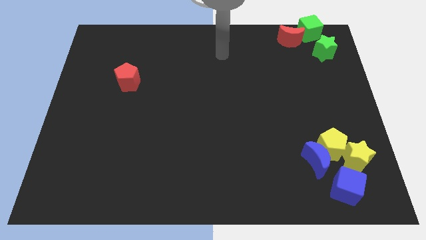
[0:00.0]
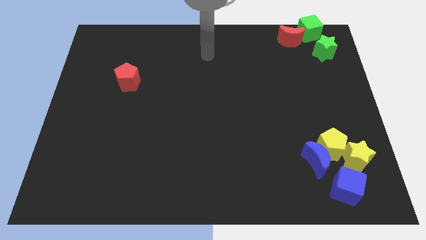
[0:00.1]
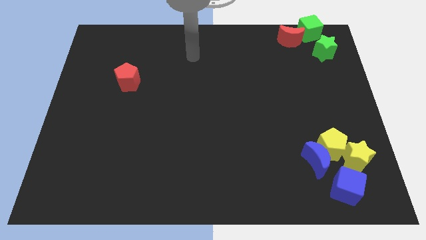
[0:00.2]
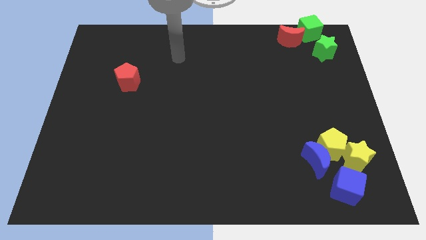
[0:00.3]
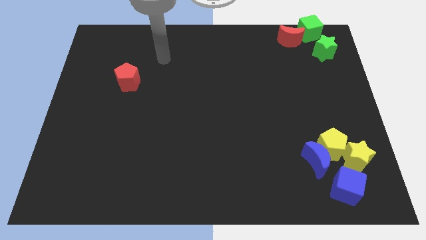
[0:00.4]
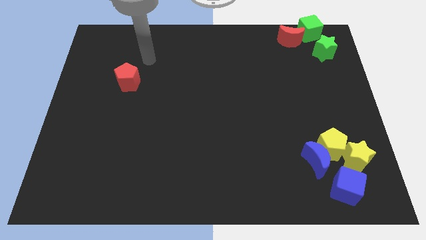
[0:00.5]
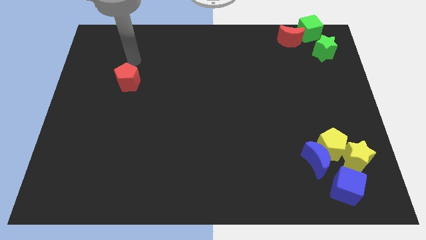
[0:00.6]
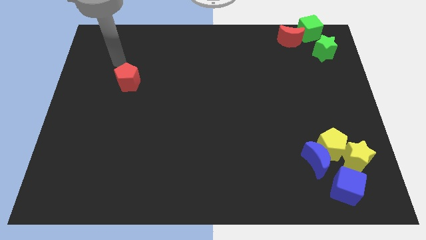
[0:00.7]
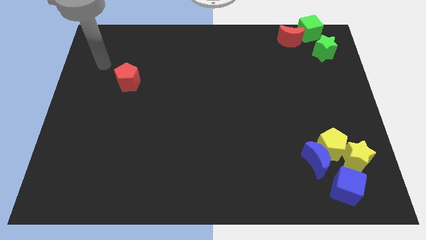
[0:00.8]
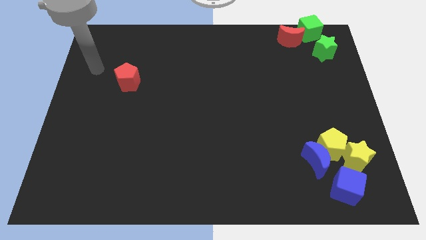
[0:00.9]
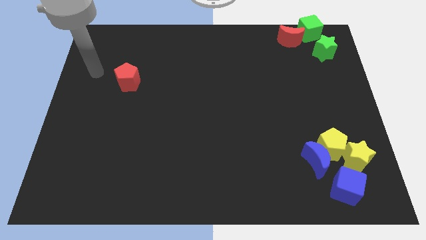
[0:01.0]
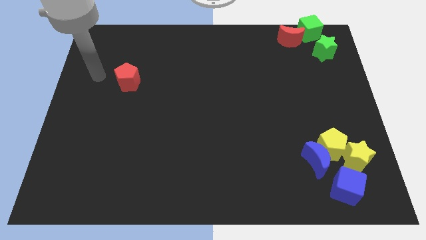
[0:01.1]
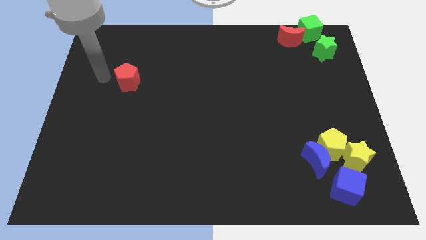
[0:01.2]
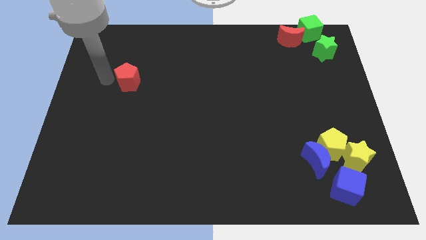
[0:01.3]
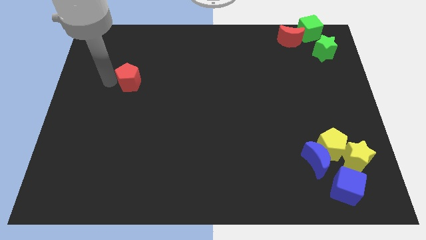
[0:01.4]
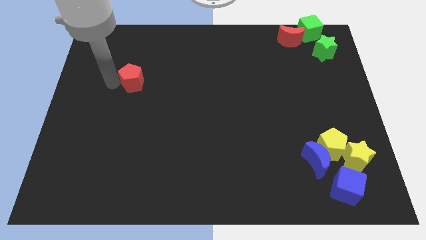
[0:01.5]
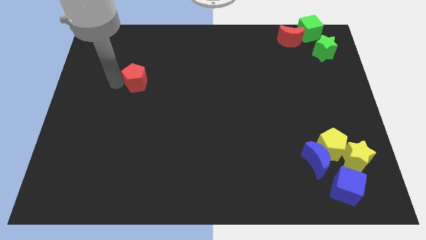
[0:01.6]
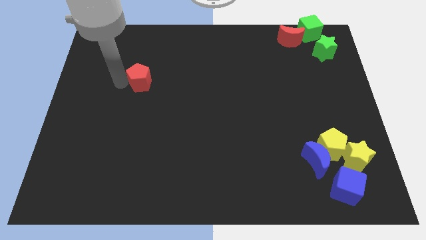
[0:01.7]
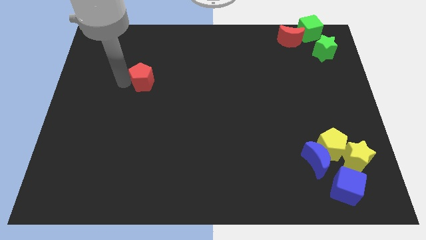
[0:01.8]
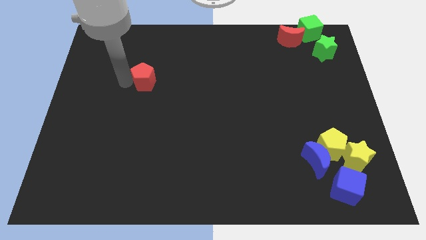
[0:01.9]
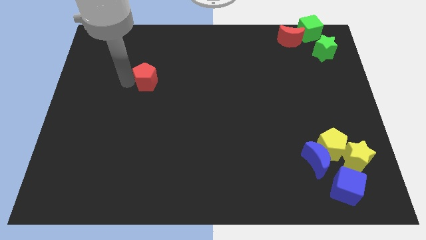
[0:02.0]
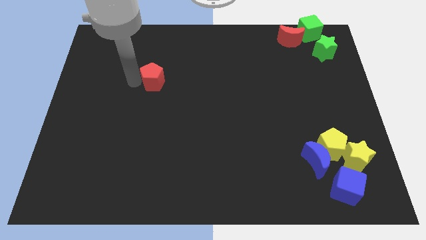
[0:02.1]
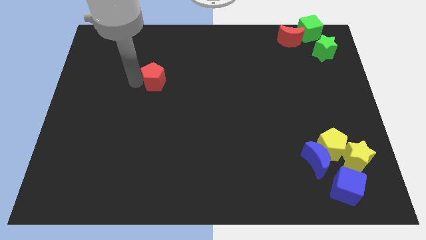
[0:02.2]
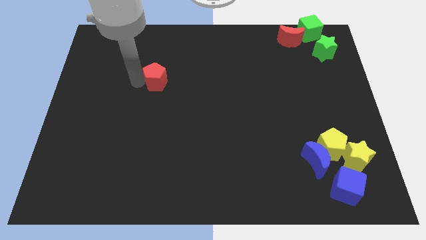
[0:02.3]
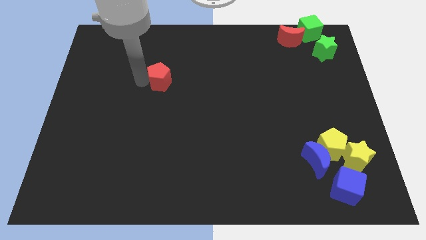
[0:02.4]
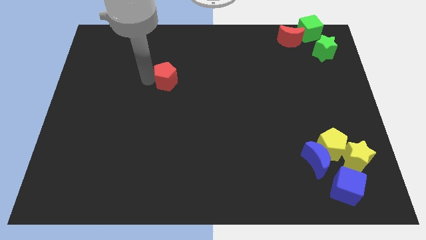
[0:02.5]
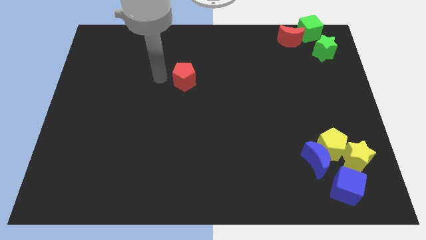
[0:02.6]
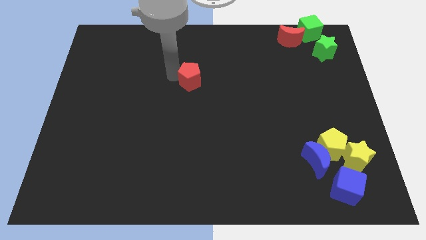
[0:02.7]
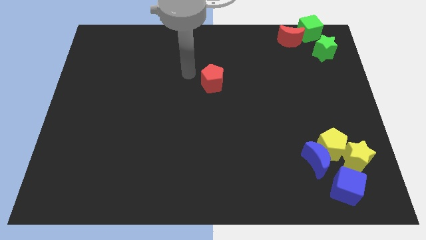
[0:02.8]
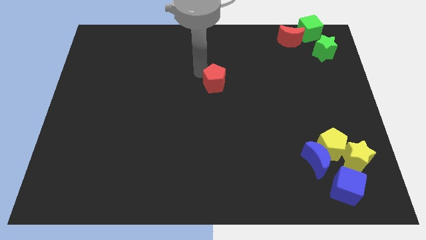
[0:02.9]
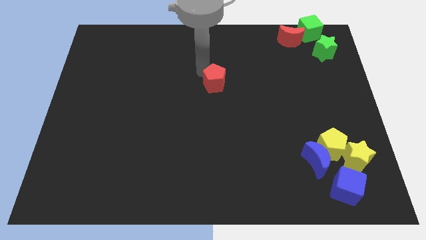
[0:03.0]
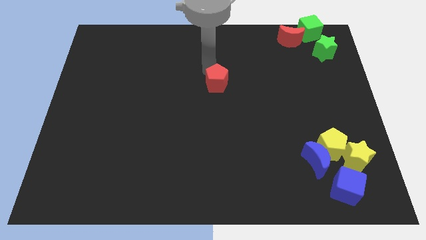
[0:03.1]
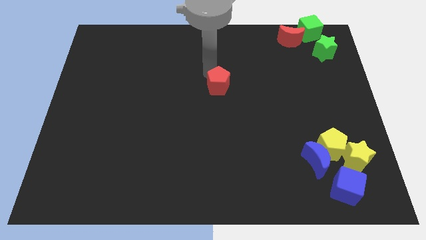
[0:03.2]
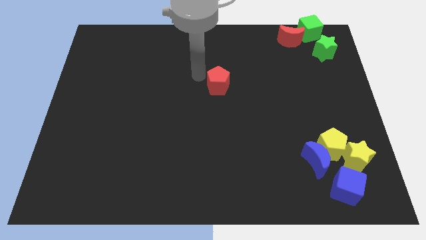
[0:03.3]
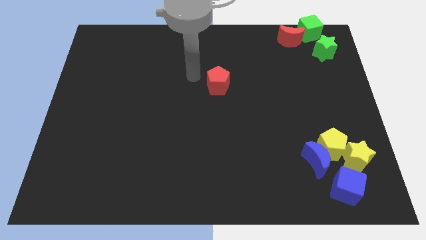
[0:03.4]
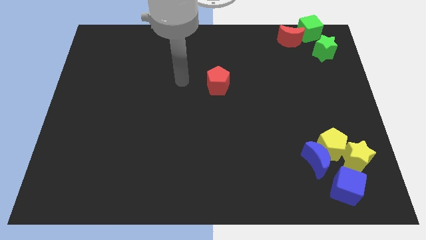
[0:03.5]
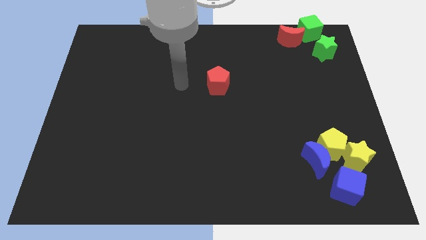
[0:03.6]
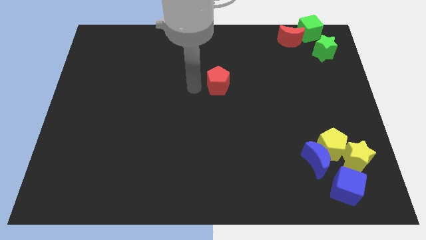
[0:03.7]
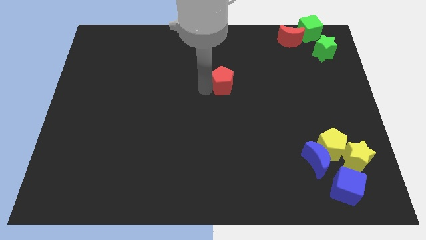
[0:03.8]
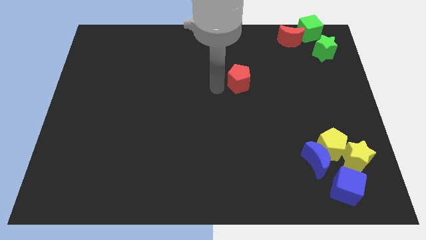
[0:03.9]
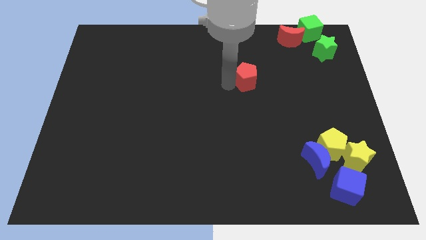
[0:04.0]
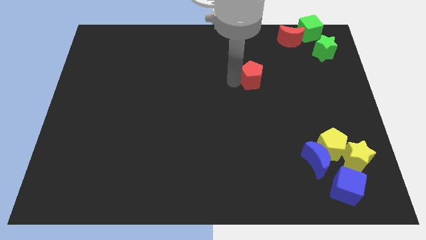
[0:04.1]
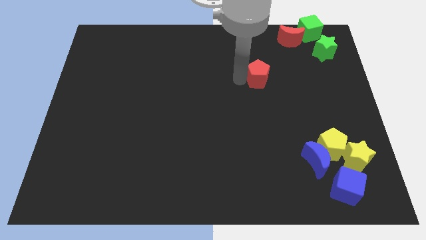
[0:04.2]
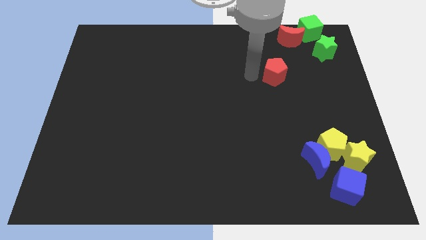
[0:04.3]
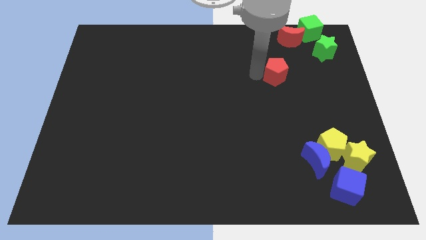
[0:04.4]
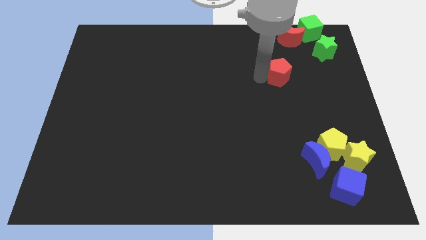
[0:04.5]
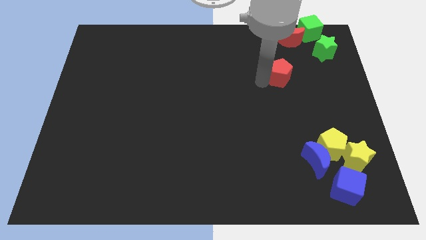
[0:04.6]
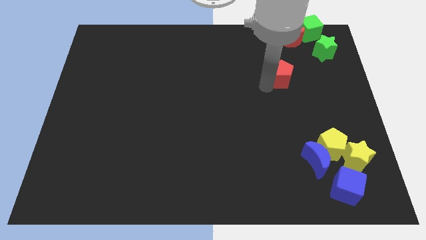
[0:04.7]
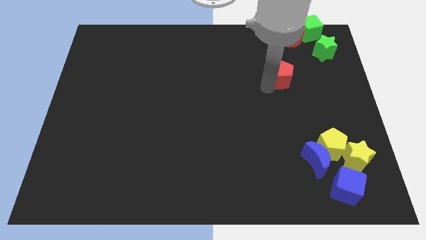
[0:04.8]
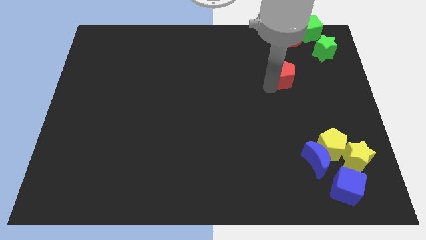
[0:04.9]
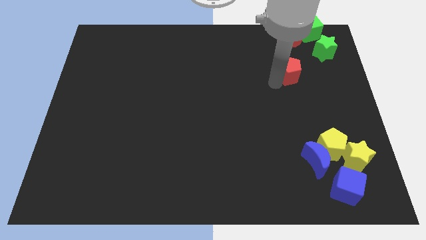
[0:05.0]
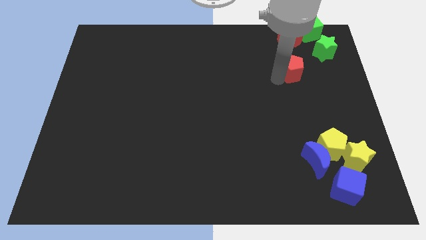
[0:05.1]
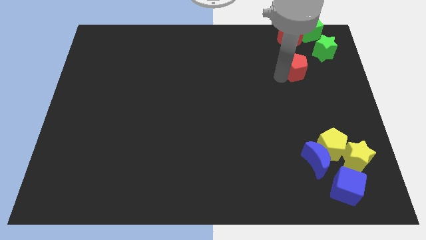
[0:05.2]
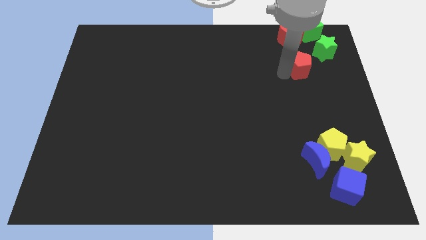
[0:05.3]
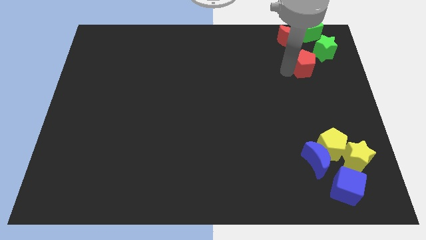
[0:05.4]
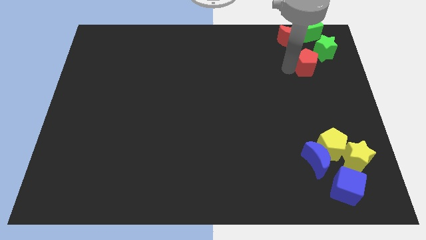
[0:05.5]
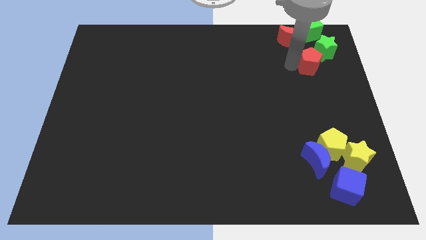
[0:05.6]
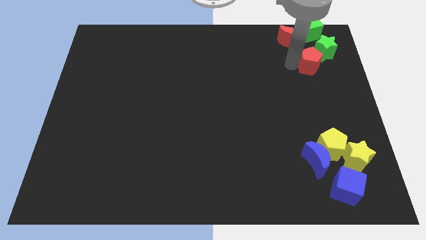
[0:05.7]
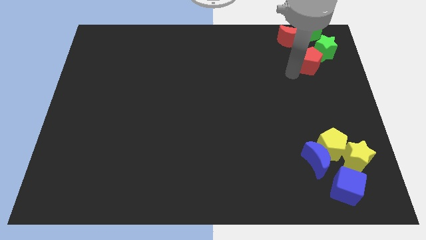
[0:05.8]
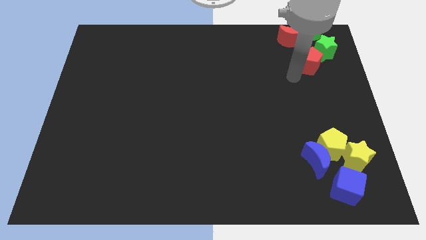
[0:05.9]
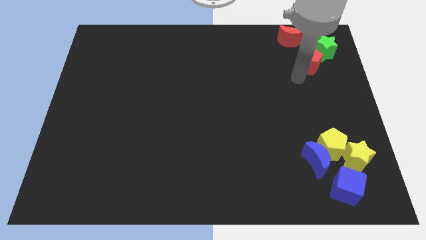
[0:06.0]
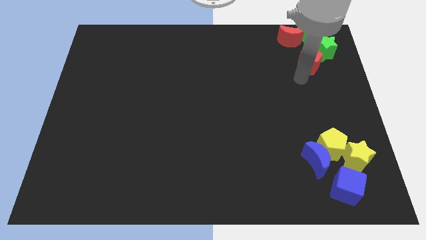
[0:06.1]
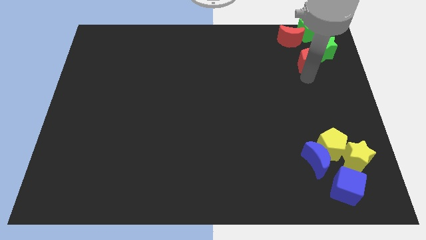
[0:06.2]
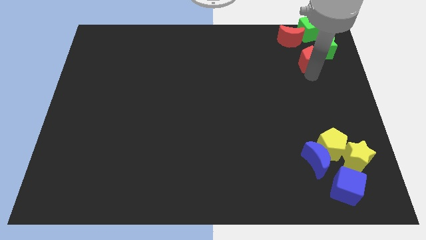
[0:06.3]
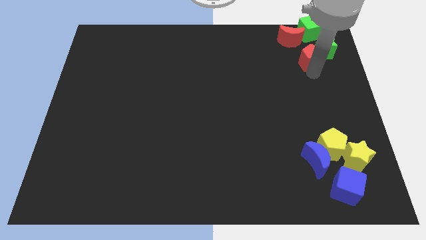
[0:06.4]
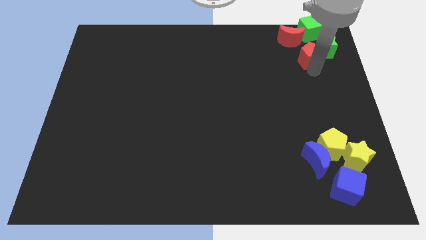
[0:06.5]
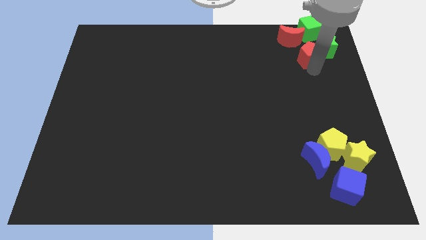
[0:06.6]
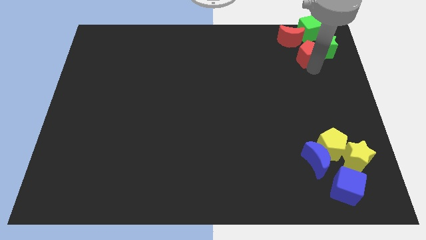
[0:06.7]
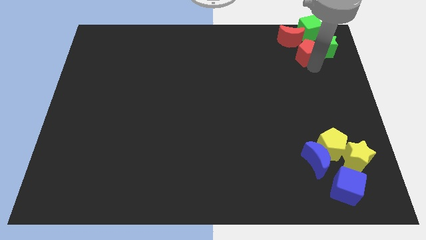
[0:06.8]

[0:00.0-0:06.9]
move the red pentagon to the group of blocks

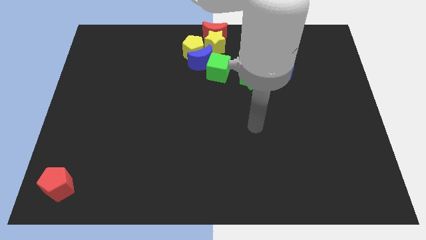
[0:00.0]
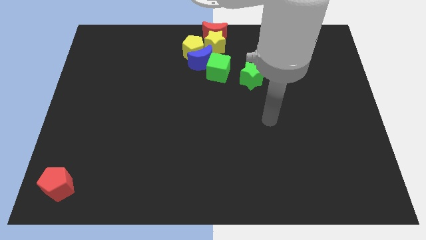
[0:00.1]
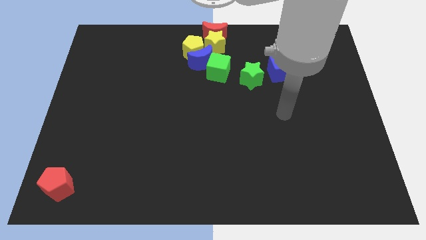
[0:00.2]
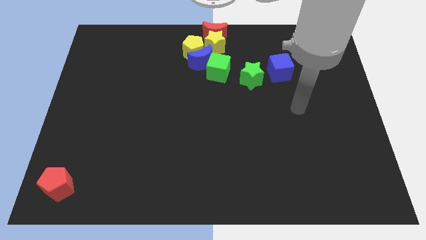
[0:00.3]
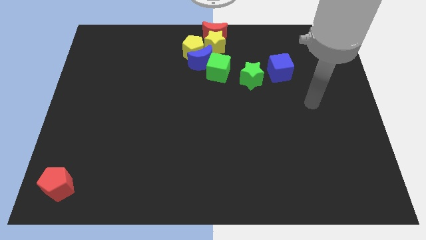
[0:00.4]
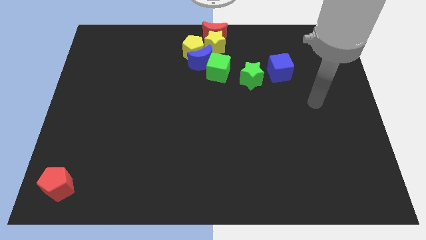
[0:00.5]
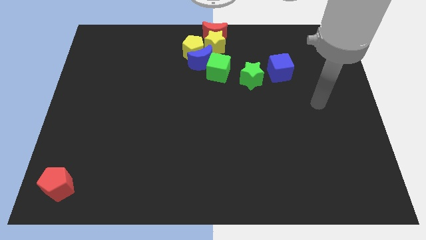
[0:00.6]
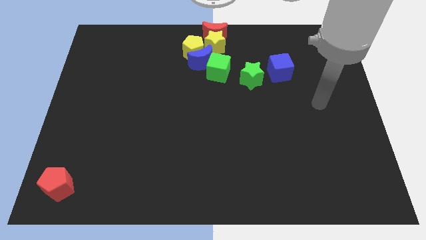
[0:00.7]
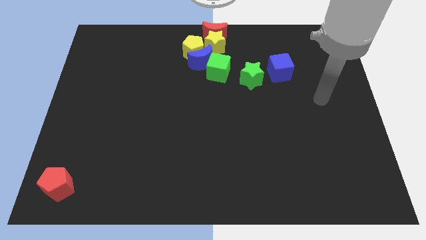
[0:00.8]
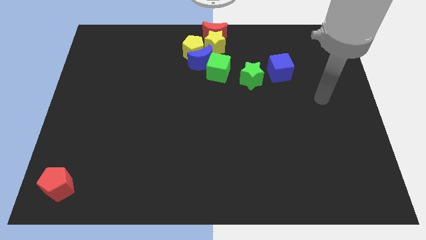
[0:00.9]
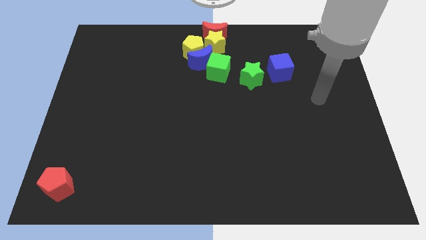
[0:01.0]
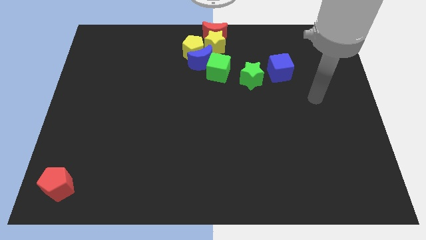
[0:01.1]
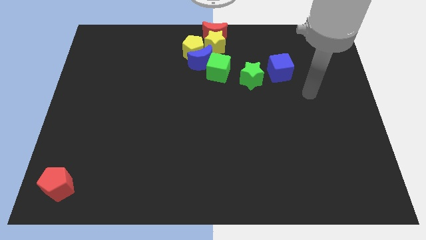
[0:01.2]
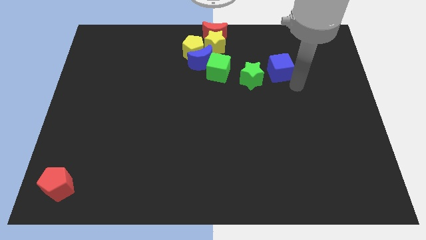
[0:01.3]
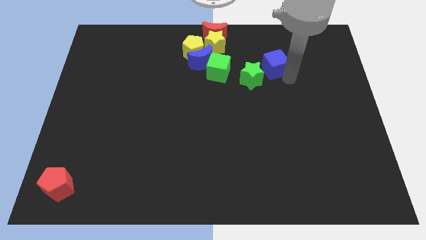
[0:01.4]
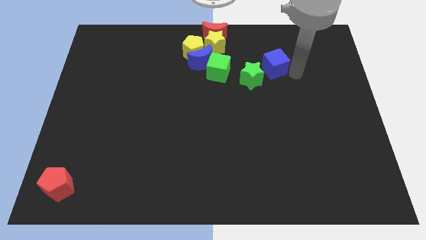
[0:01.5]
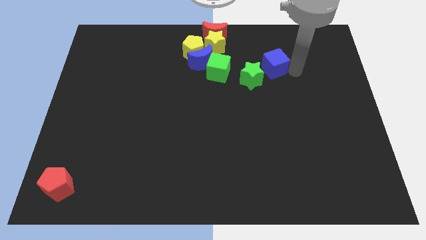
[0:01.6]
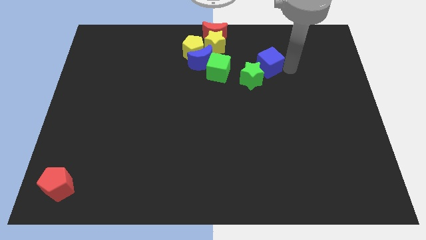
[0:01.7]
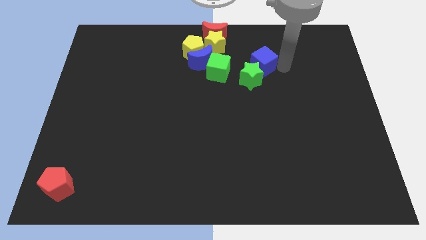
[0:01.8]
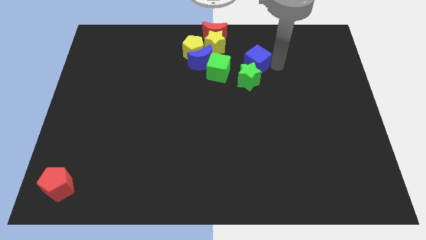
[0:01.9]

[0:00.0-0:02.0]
make the blue cube to touch the top side of the green star
